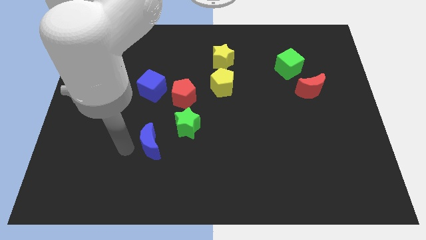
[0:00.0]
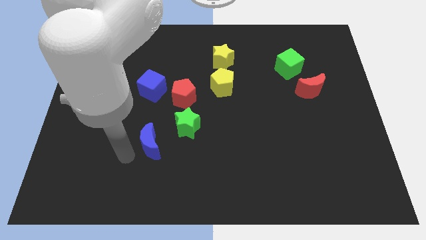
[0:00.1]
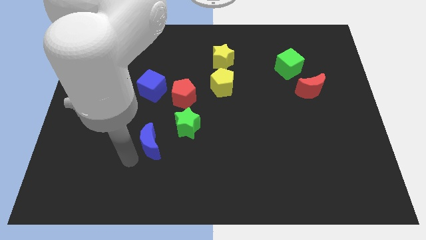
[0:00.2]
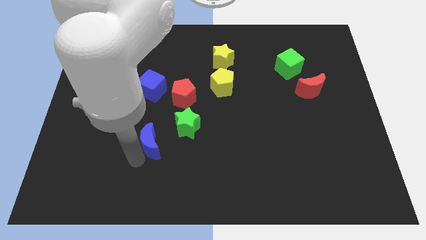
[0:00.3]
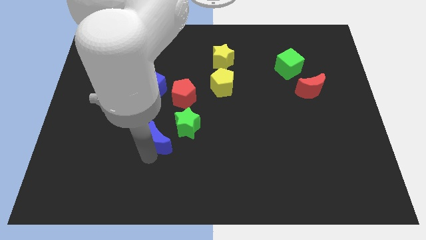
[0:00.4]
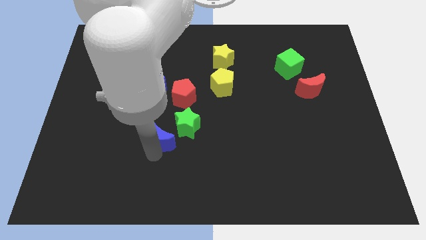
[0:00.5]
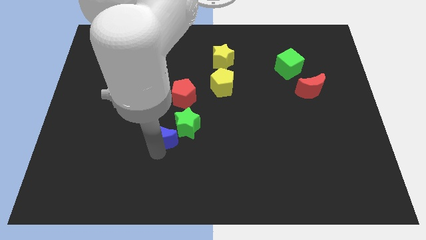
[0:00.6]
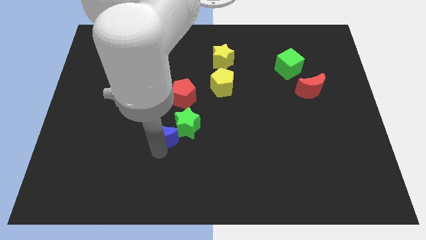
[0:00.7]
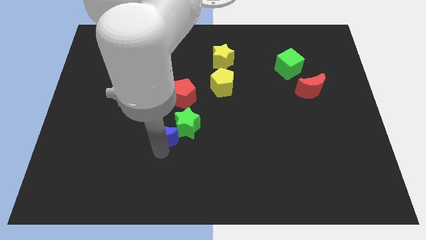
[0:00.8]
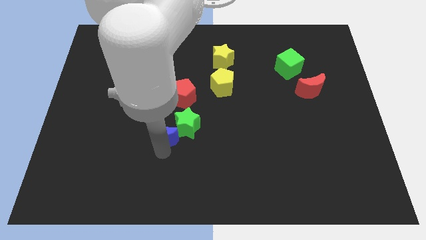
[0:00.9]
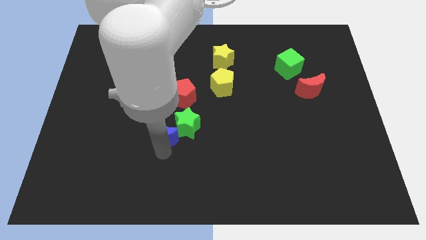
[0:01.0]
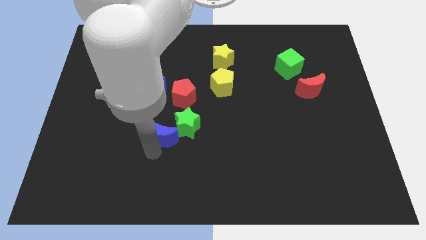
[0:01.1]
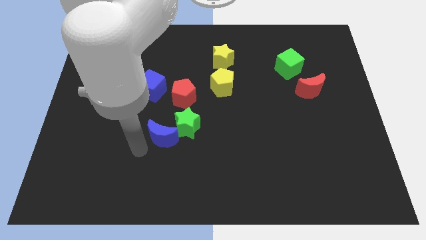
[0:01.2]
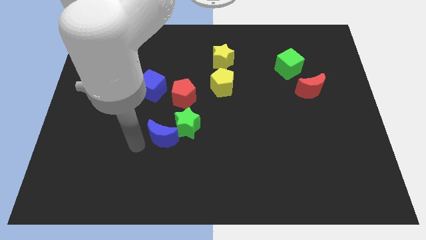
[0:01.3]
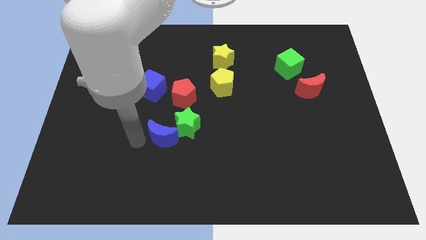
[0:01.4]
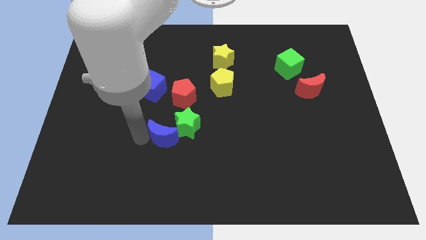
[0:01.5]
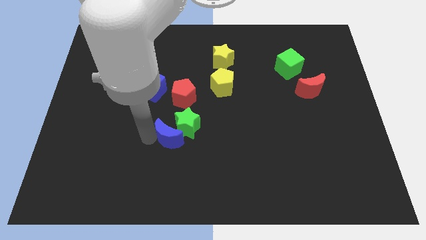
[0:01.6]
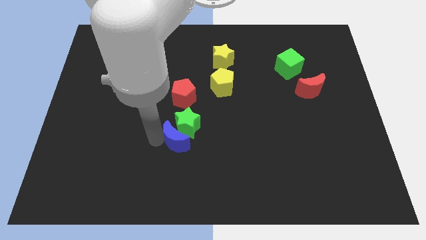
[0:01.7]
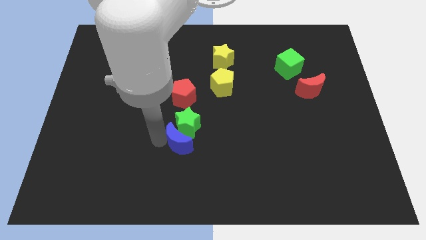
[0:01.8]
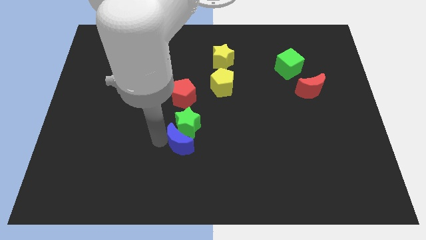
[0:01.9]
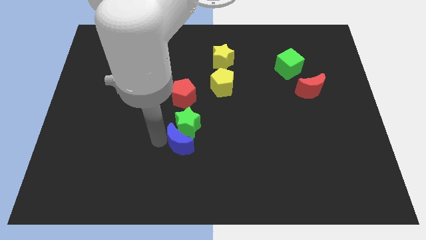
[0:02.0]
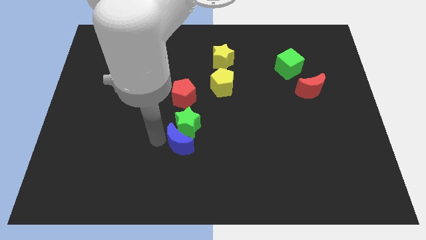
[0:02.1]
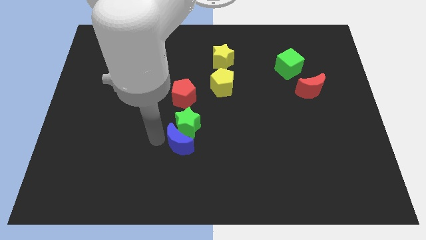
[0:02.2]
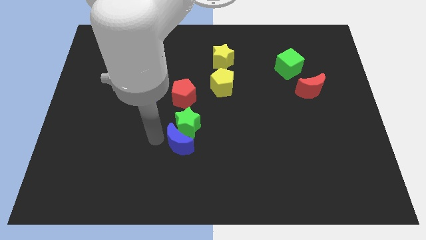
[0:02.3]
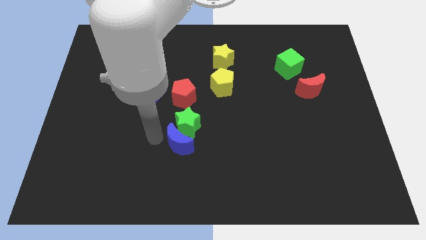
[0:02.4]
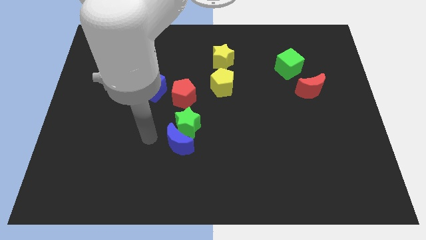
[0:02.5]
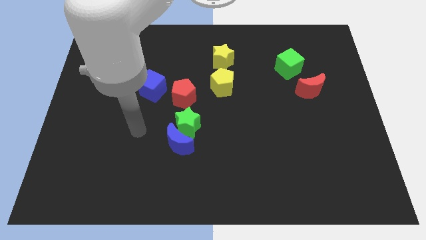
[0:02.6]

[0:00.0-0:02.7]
place the blue crescent into the green star

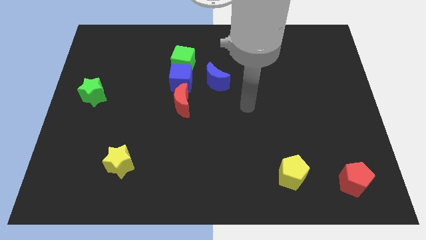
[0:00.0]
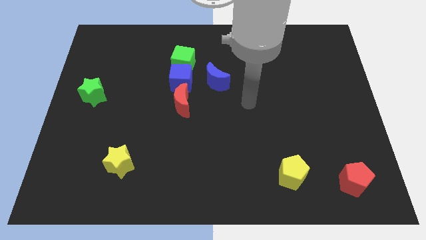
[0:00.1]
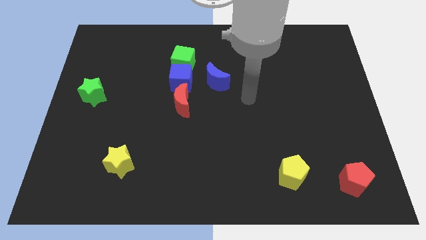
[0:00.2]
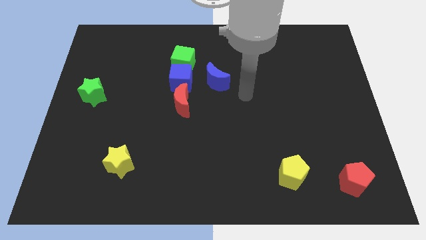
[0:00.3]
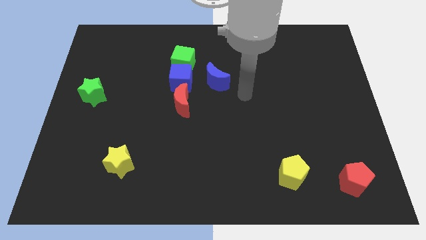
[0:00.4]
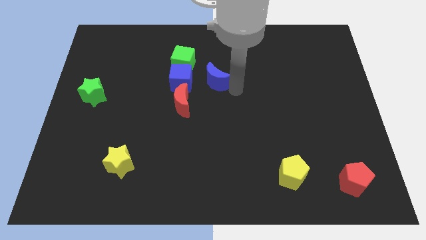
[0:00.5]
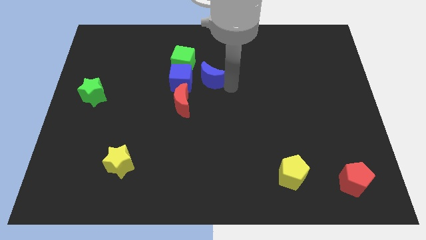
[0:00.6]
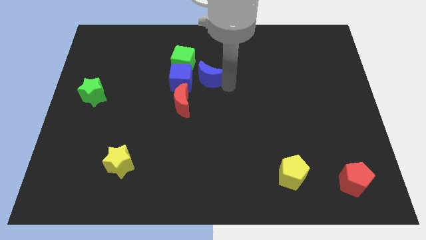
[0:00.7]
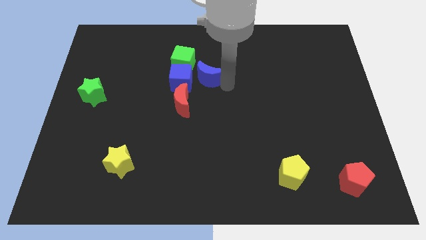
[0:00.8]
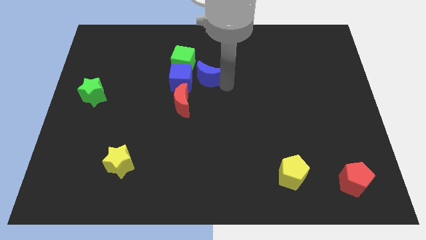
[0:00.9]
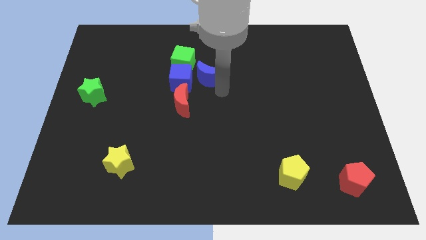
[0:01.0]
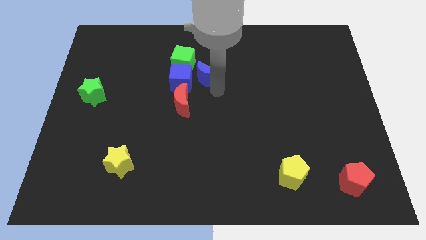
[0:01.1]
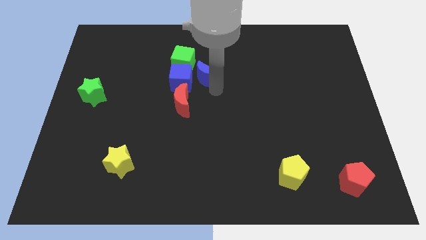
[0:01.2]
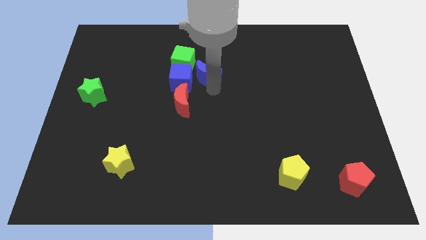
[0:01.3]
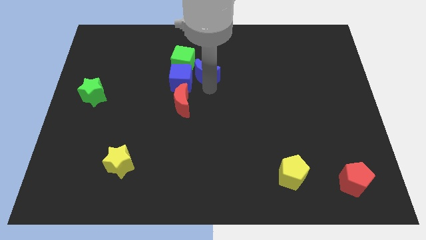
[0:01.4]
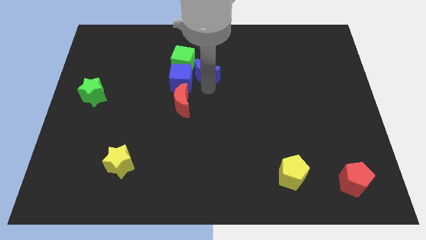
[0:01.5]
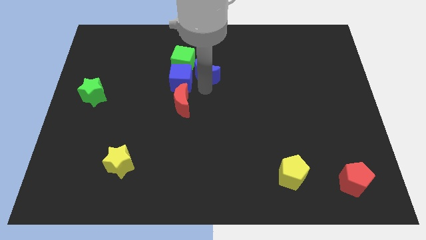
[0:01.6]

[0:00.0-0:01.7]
place the blue moon at the right side of blue cube

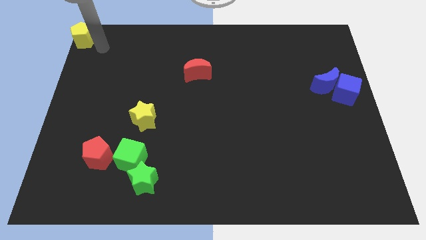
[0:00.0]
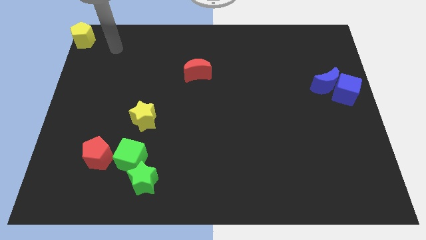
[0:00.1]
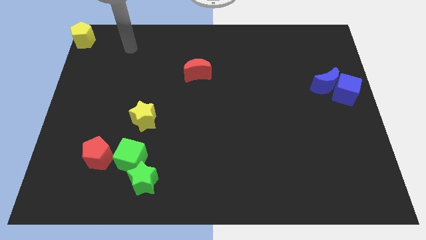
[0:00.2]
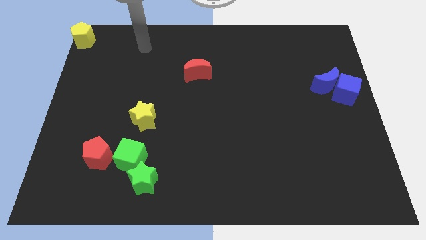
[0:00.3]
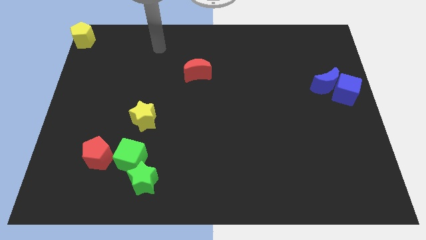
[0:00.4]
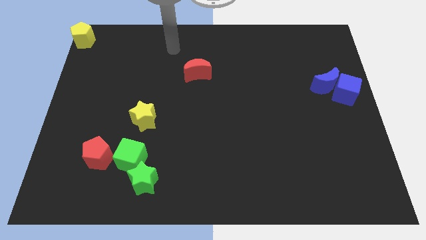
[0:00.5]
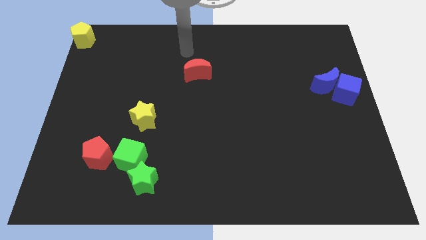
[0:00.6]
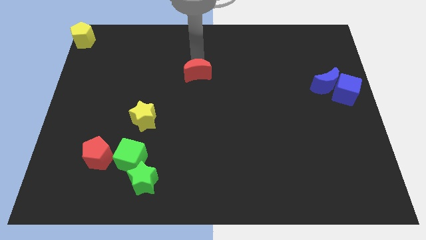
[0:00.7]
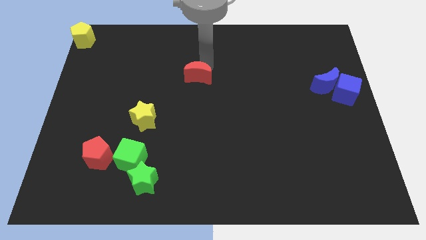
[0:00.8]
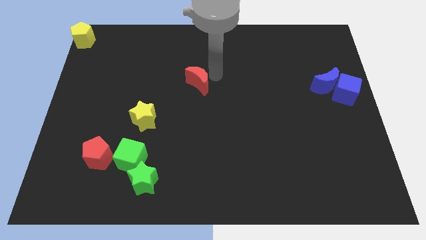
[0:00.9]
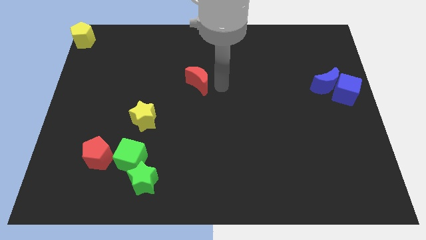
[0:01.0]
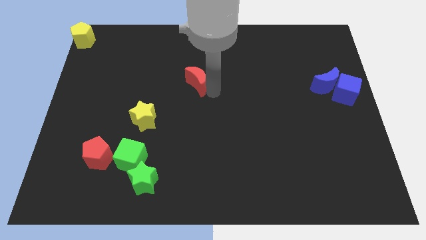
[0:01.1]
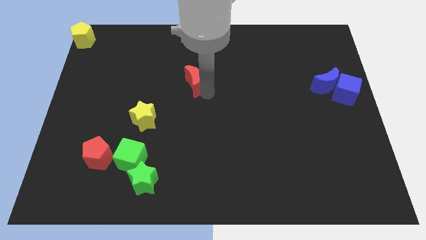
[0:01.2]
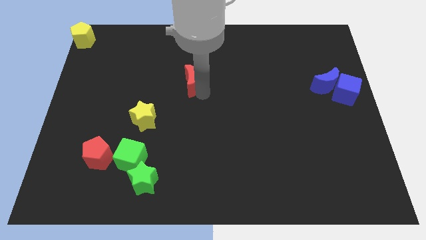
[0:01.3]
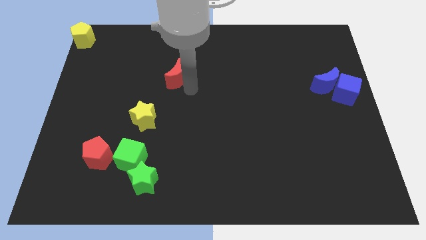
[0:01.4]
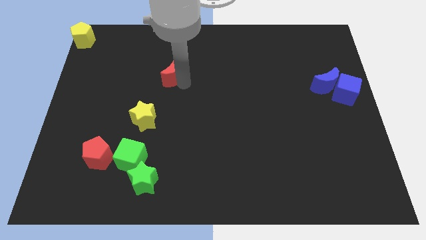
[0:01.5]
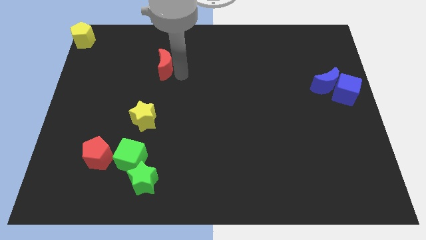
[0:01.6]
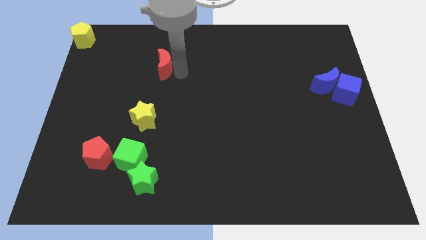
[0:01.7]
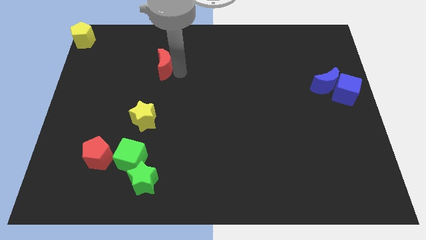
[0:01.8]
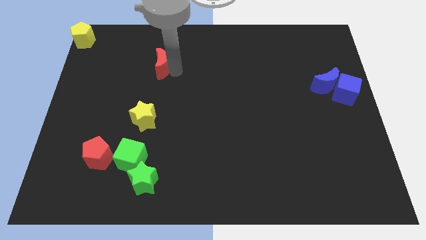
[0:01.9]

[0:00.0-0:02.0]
drag the red moon to the top of yellow star

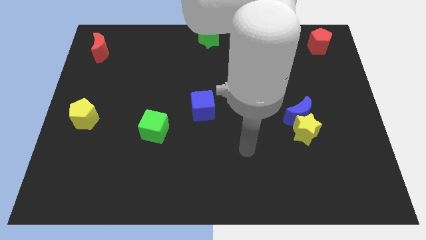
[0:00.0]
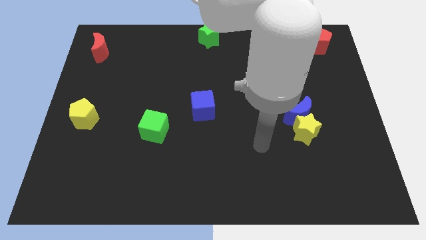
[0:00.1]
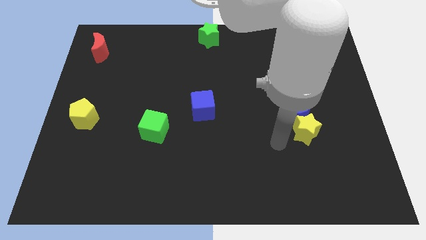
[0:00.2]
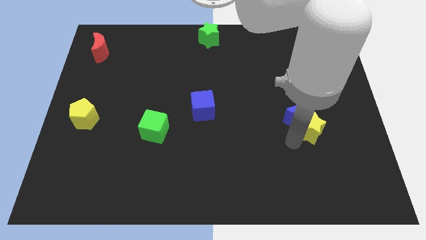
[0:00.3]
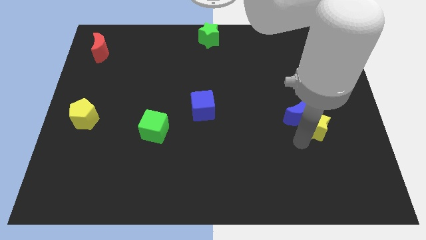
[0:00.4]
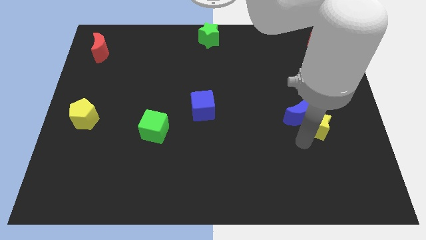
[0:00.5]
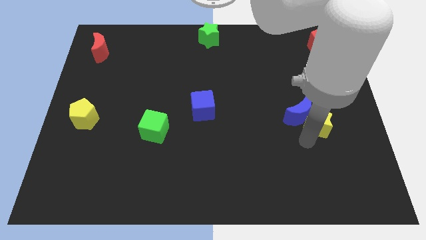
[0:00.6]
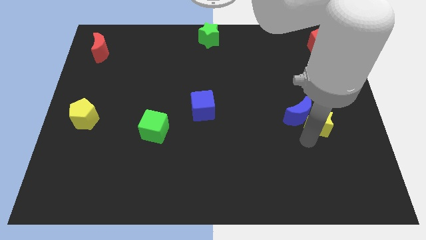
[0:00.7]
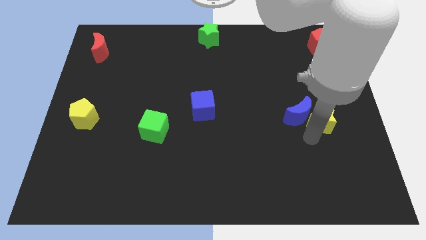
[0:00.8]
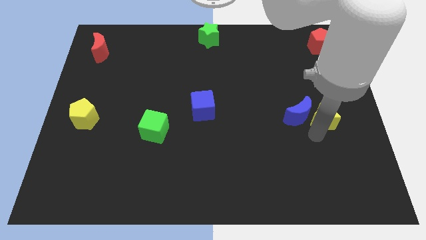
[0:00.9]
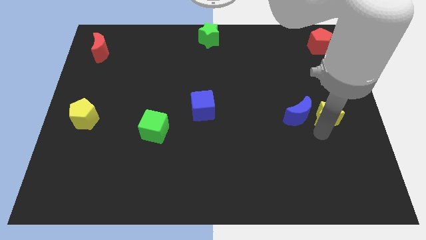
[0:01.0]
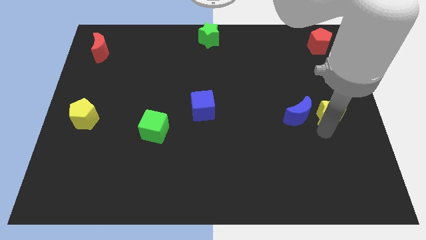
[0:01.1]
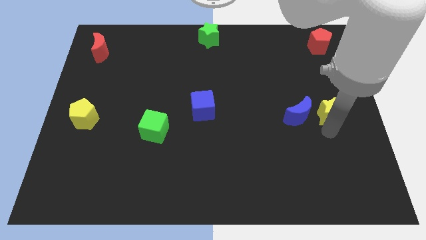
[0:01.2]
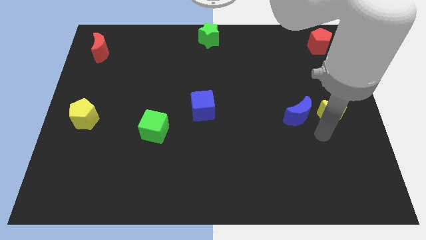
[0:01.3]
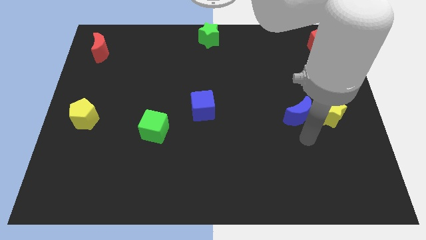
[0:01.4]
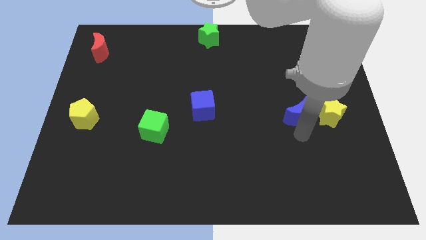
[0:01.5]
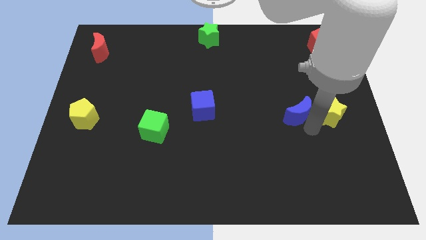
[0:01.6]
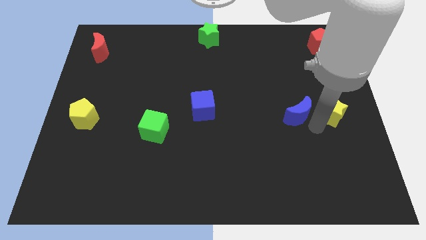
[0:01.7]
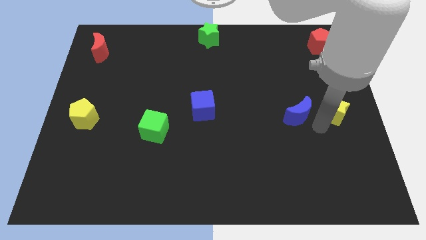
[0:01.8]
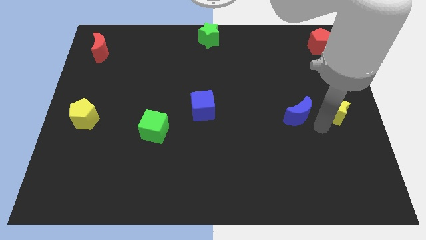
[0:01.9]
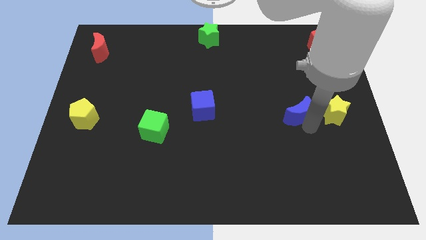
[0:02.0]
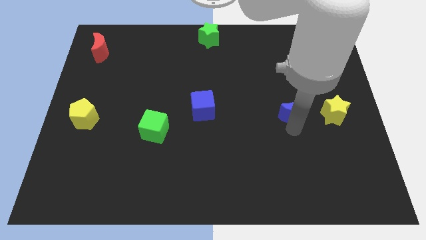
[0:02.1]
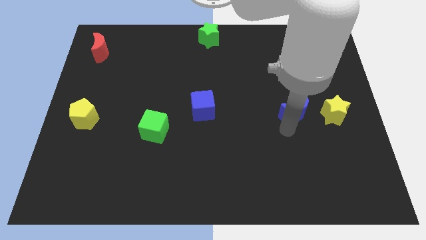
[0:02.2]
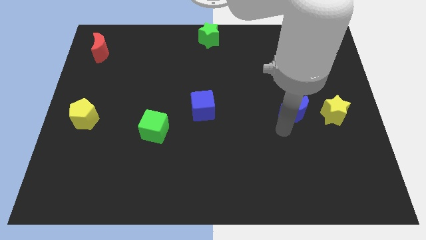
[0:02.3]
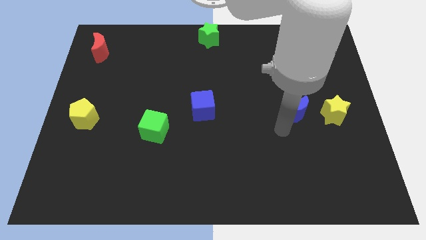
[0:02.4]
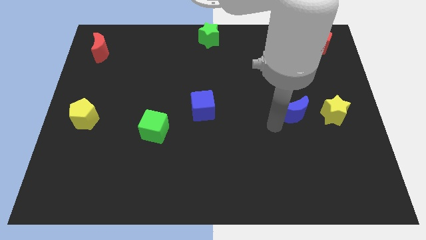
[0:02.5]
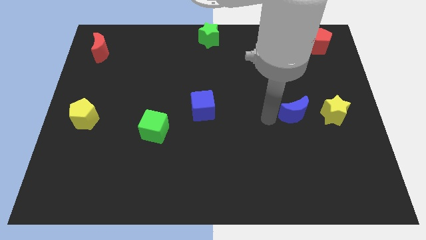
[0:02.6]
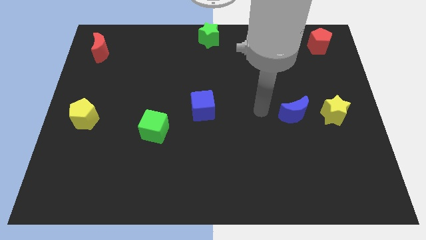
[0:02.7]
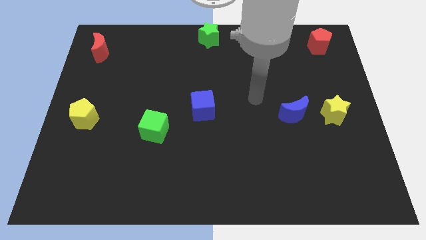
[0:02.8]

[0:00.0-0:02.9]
separate yellow star from blue moon
